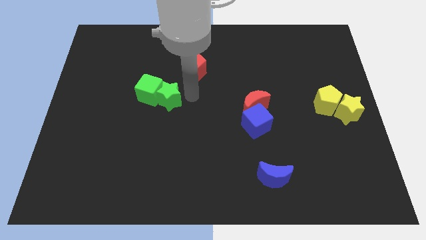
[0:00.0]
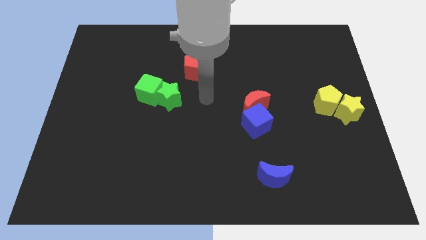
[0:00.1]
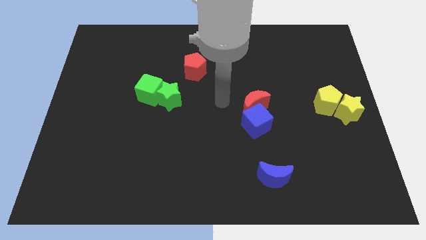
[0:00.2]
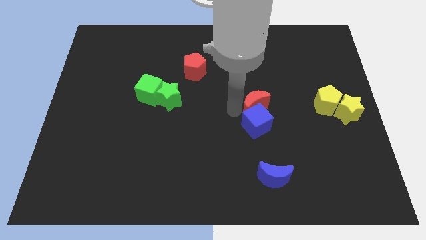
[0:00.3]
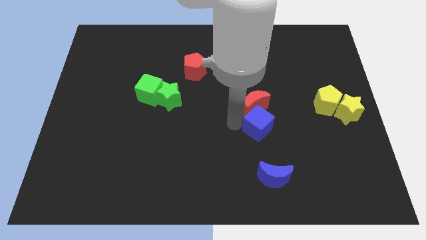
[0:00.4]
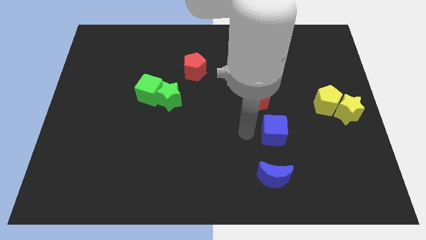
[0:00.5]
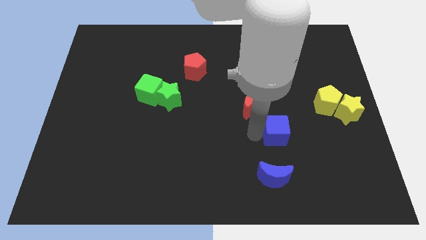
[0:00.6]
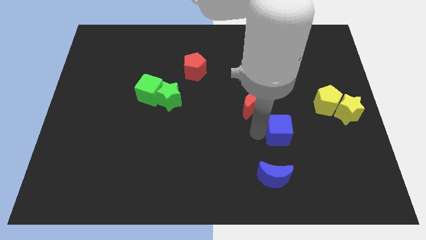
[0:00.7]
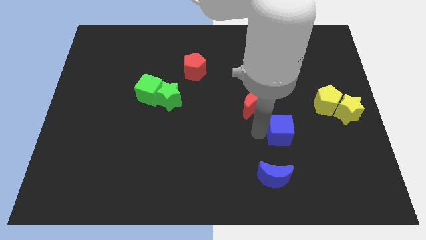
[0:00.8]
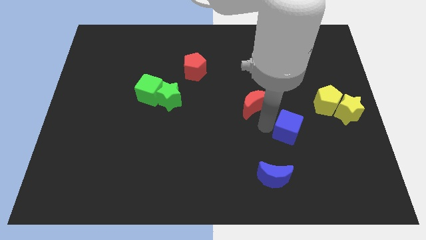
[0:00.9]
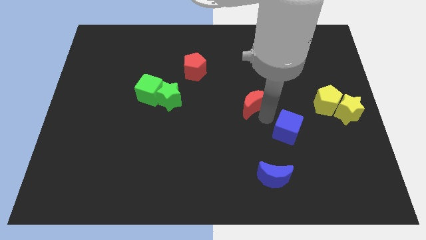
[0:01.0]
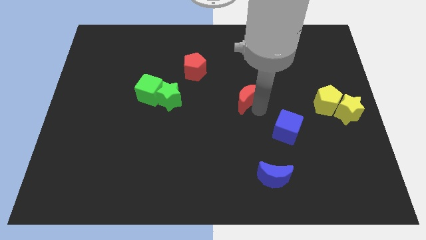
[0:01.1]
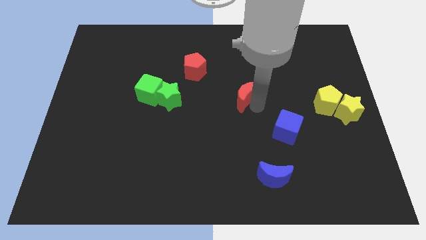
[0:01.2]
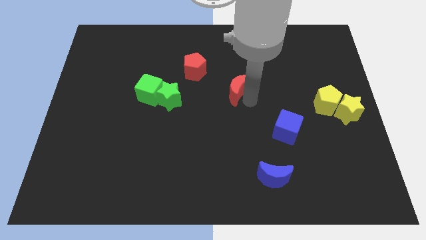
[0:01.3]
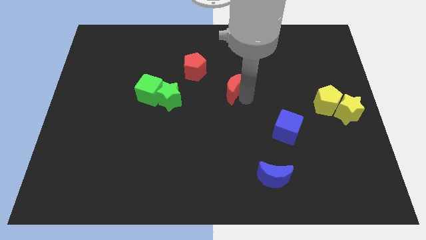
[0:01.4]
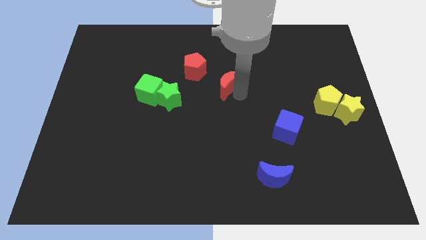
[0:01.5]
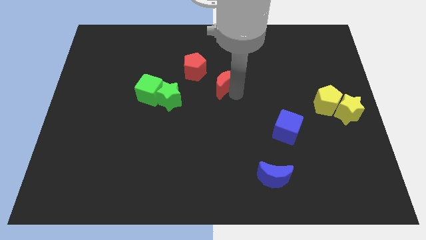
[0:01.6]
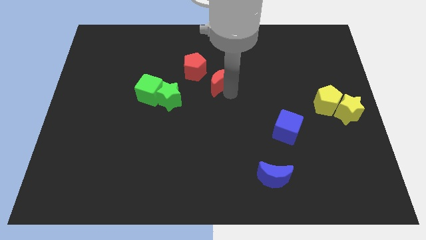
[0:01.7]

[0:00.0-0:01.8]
separate the blue cube and red crescent

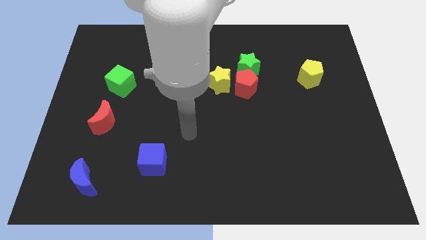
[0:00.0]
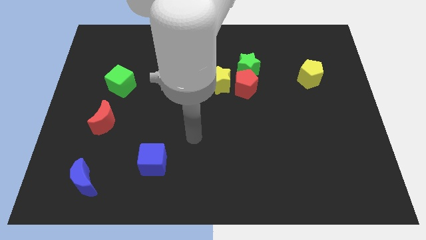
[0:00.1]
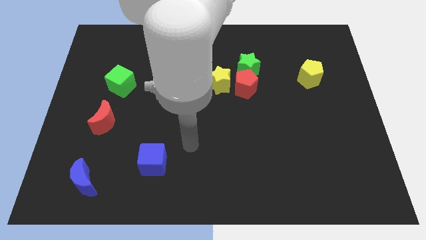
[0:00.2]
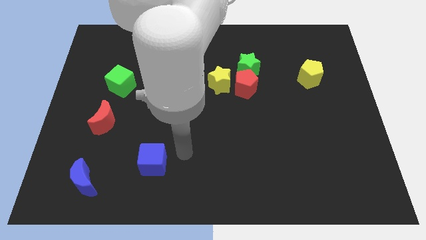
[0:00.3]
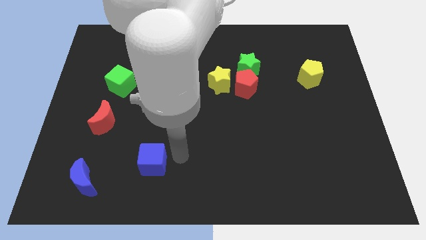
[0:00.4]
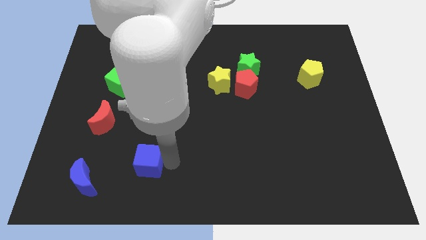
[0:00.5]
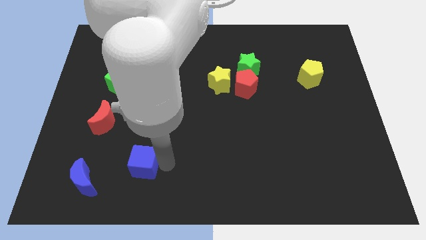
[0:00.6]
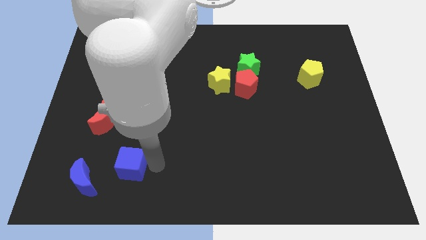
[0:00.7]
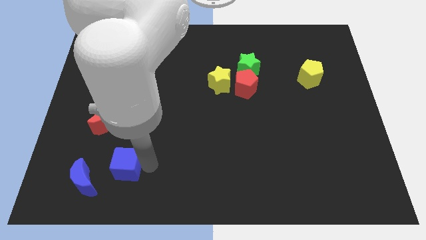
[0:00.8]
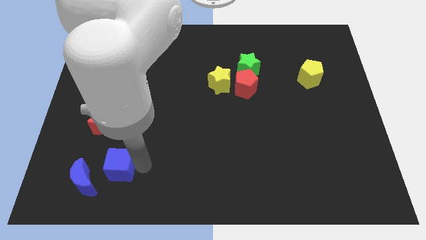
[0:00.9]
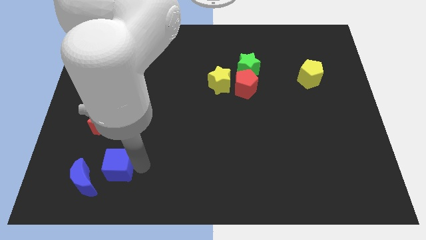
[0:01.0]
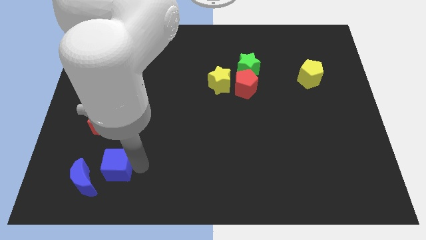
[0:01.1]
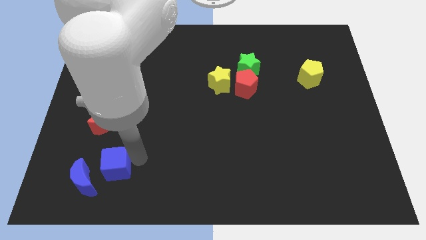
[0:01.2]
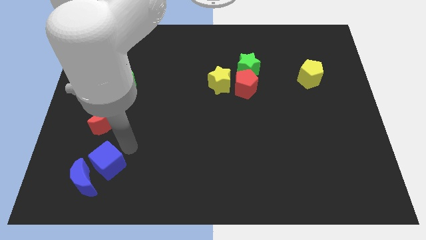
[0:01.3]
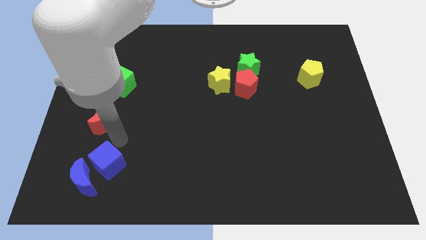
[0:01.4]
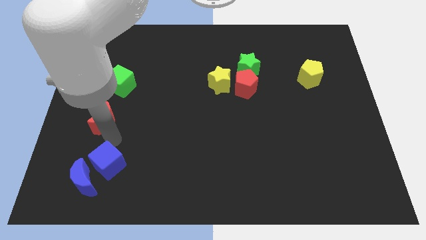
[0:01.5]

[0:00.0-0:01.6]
move the blue cube close to the blue crescent

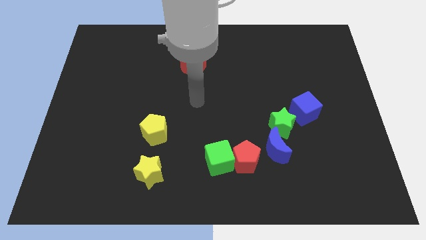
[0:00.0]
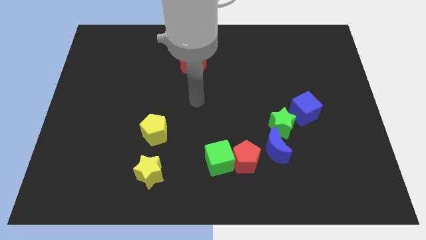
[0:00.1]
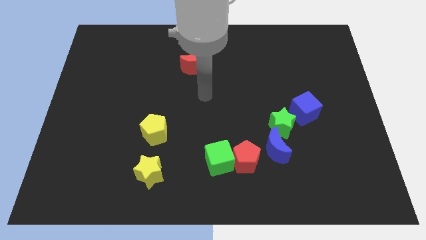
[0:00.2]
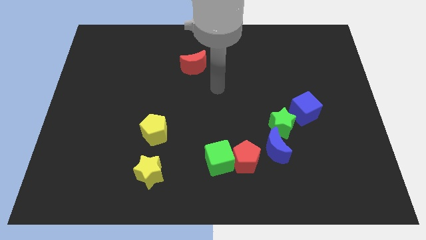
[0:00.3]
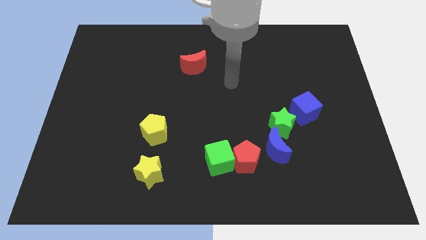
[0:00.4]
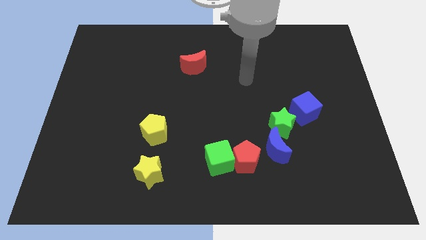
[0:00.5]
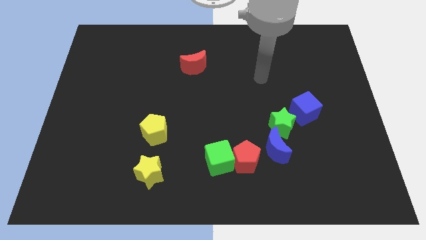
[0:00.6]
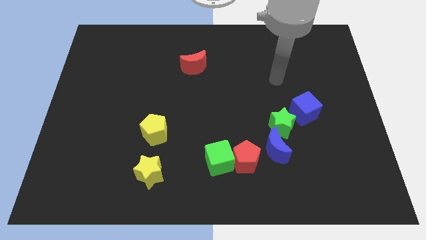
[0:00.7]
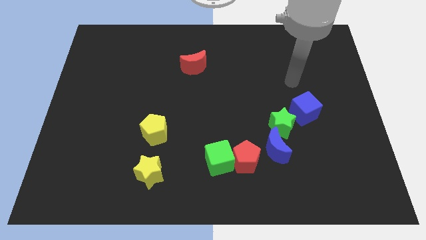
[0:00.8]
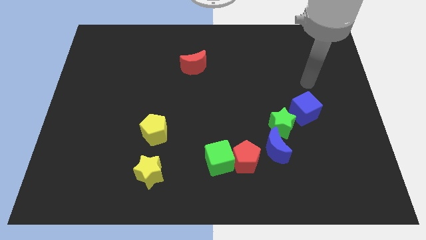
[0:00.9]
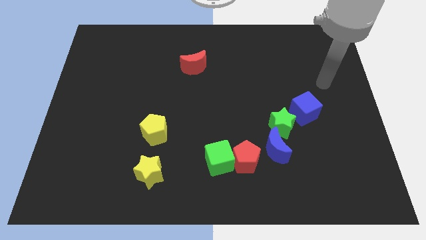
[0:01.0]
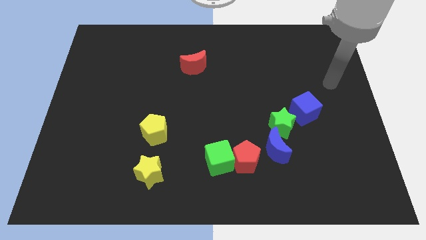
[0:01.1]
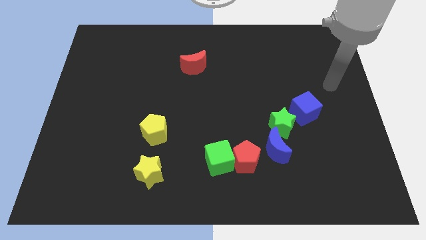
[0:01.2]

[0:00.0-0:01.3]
place the arm above the blue cube

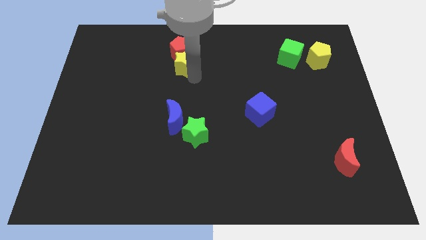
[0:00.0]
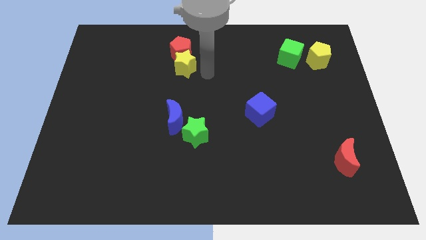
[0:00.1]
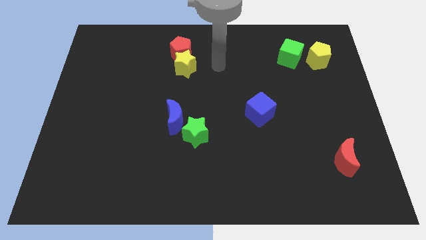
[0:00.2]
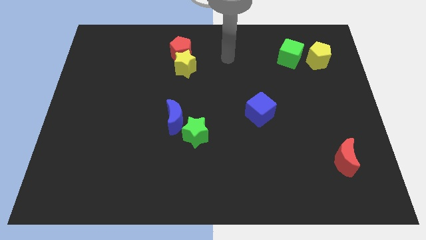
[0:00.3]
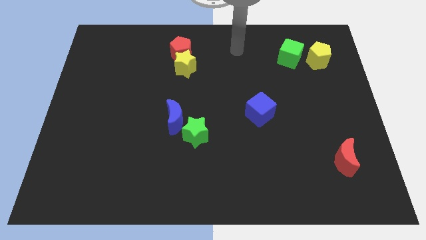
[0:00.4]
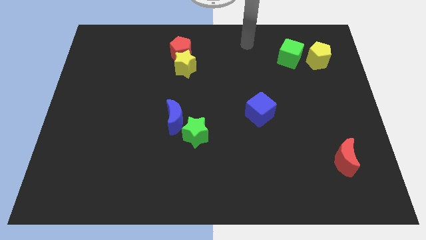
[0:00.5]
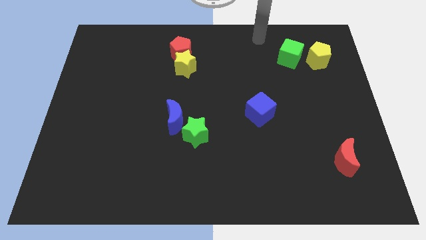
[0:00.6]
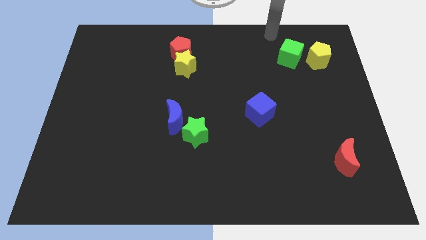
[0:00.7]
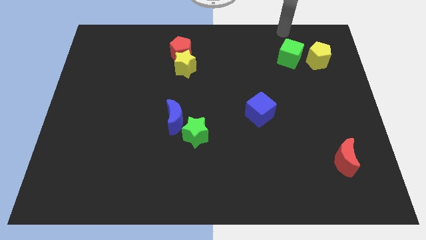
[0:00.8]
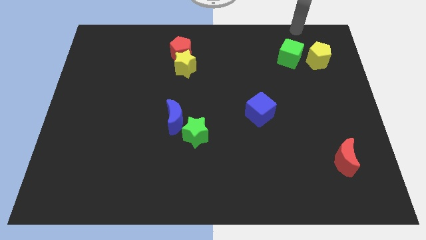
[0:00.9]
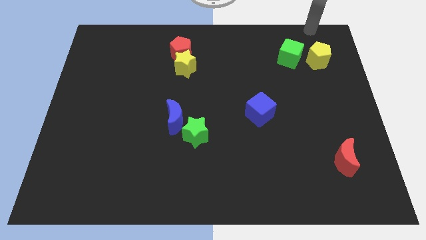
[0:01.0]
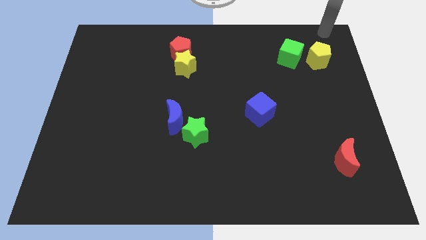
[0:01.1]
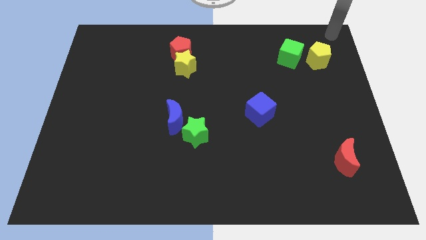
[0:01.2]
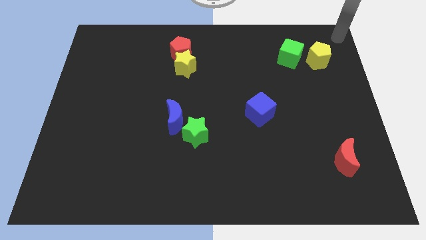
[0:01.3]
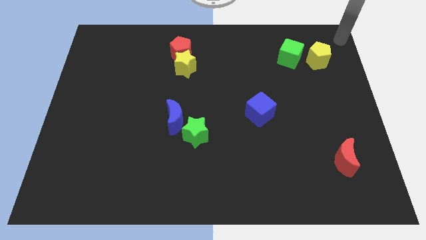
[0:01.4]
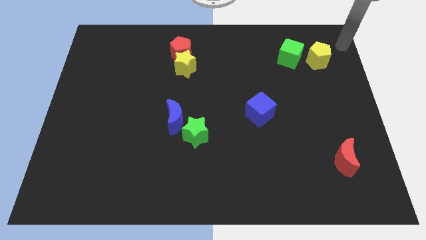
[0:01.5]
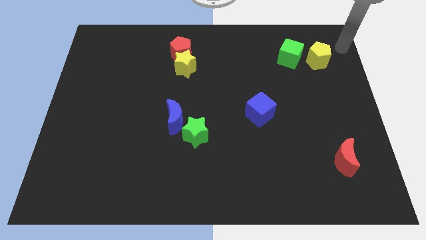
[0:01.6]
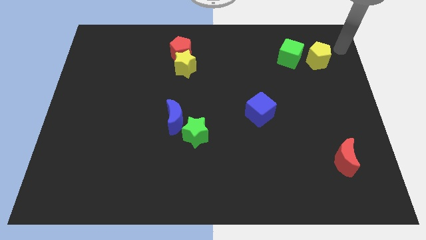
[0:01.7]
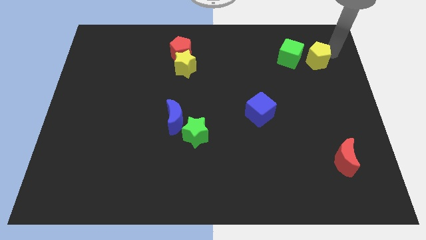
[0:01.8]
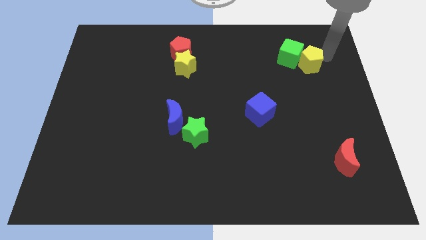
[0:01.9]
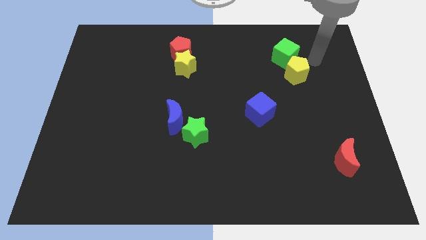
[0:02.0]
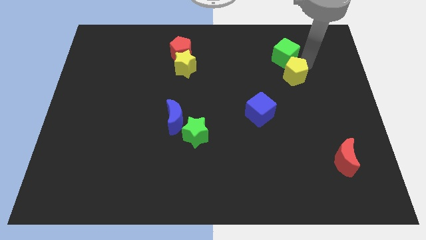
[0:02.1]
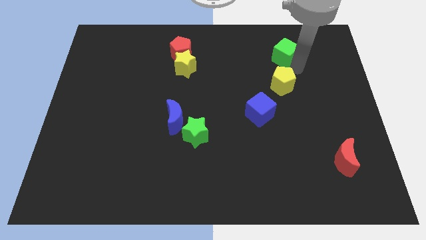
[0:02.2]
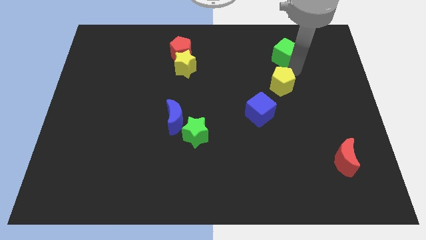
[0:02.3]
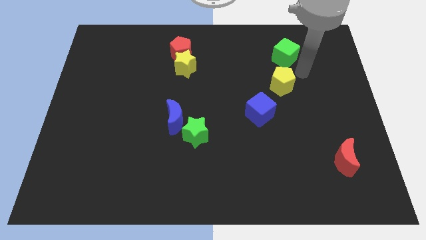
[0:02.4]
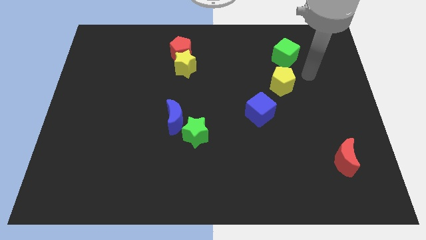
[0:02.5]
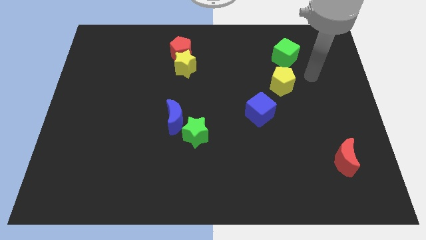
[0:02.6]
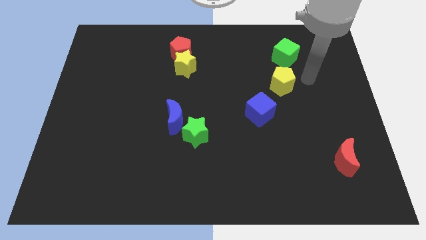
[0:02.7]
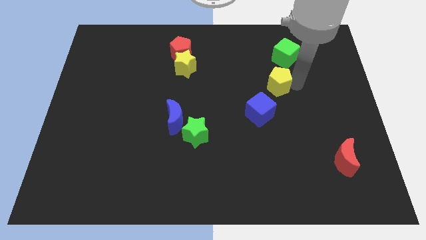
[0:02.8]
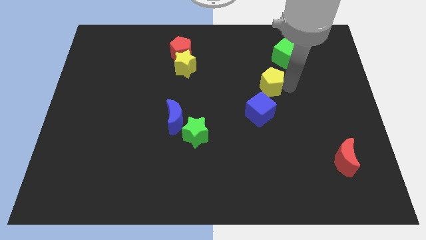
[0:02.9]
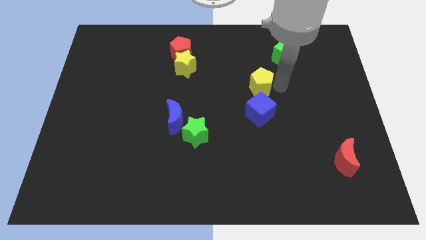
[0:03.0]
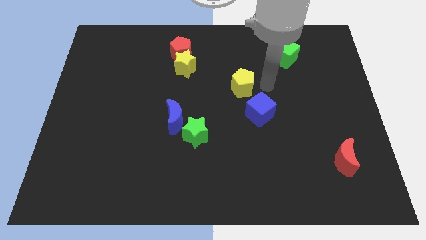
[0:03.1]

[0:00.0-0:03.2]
place the yellow pentagon vertically above the blue cube

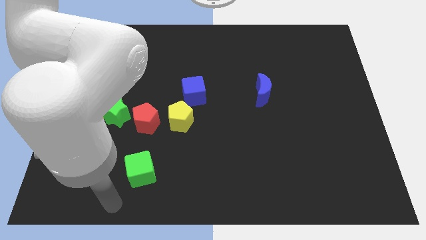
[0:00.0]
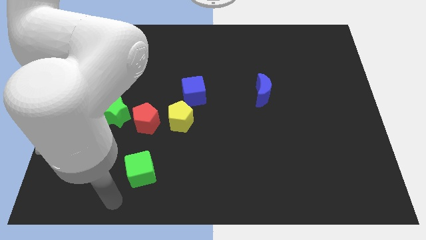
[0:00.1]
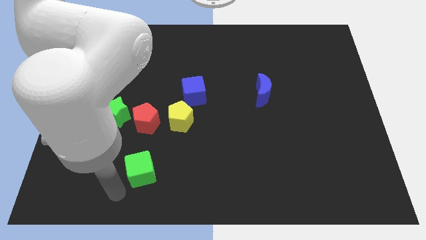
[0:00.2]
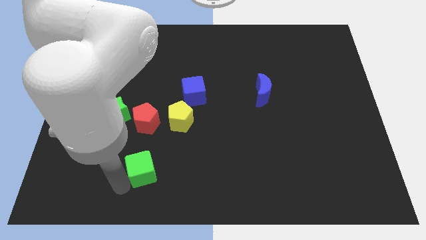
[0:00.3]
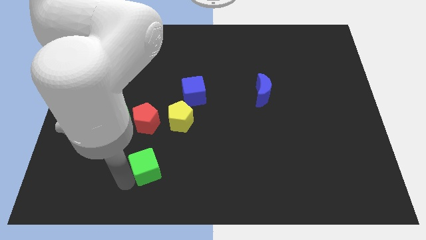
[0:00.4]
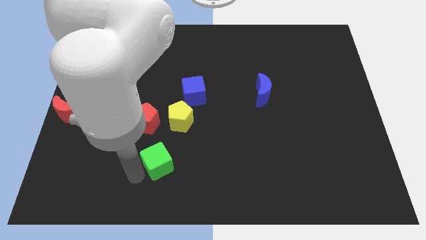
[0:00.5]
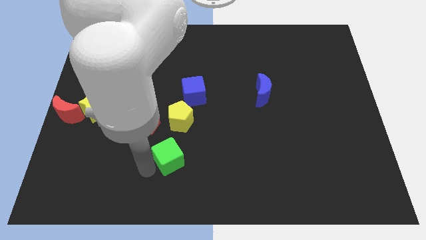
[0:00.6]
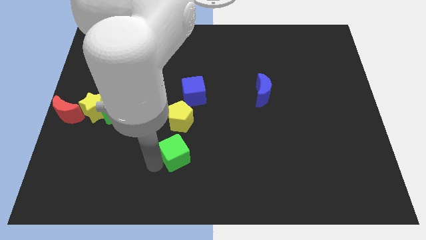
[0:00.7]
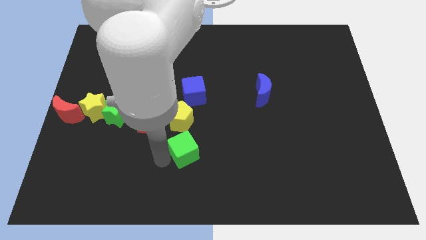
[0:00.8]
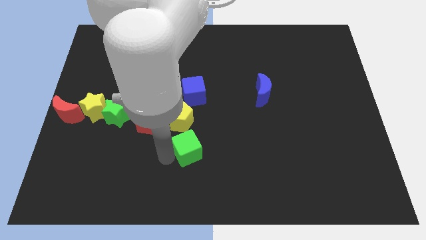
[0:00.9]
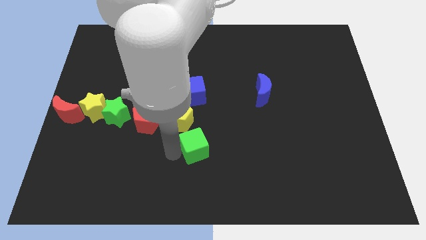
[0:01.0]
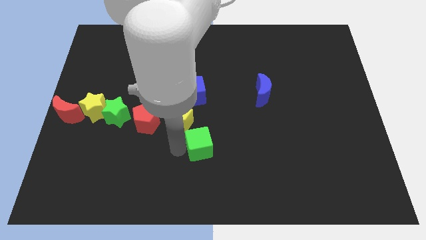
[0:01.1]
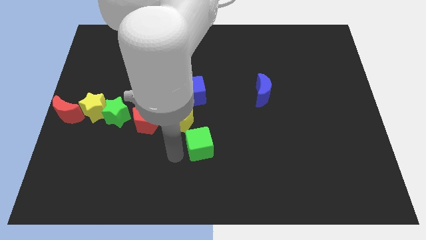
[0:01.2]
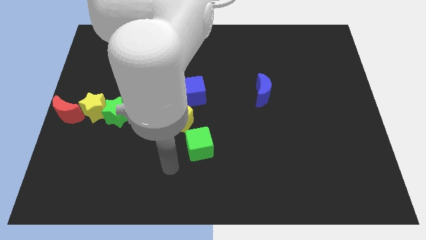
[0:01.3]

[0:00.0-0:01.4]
place the green cube to the diagonal bottom right of the yellow pentagon
